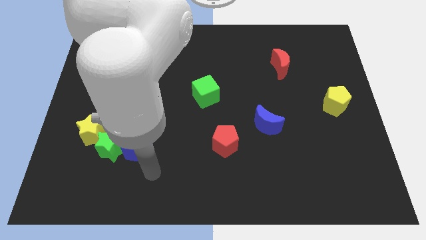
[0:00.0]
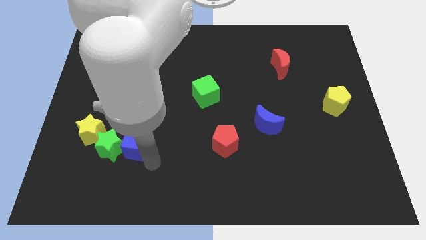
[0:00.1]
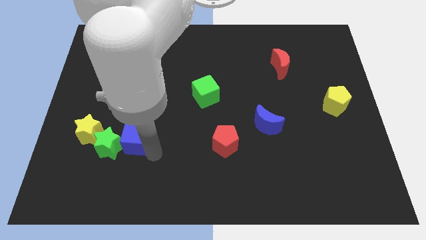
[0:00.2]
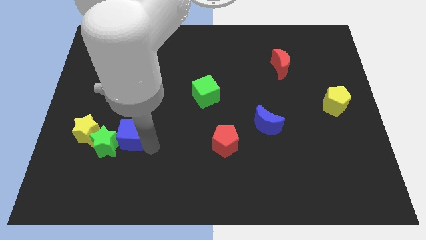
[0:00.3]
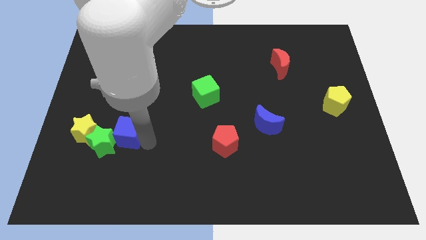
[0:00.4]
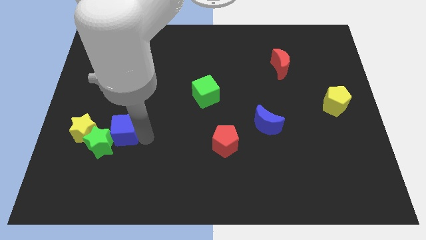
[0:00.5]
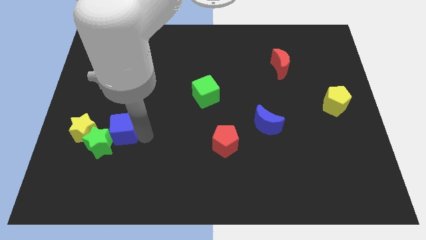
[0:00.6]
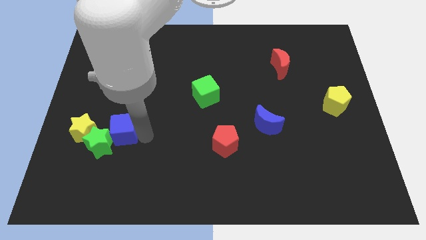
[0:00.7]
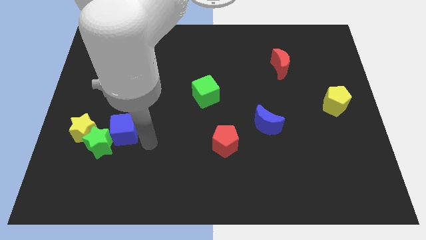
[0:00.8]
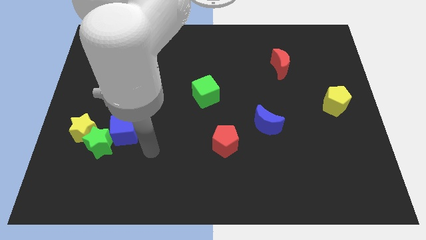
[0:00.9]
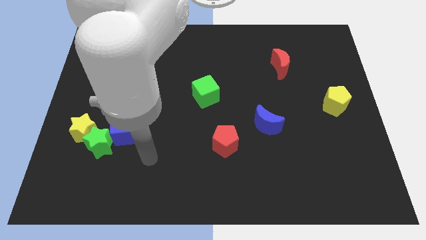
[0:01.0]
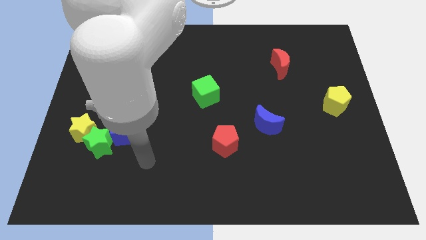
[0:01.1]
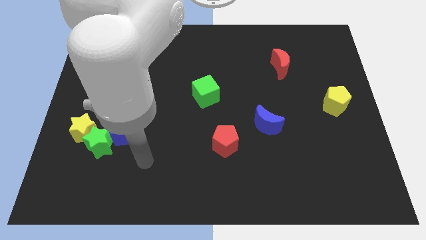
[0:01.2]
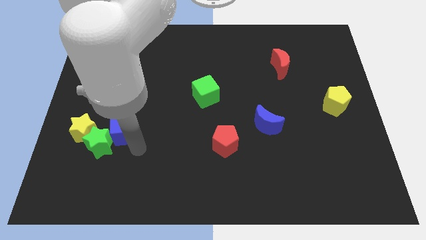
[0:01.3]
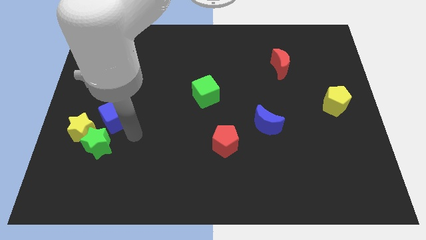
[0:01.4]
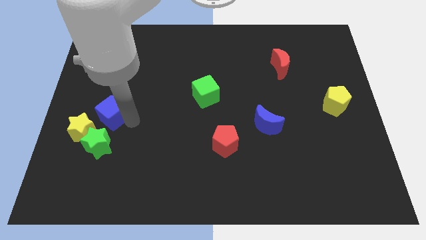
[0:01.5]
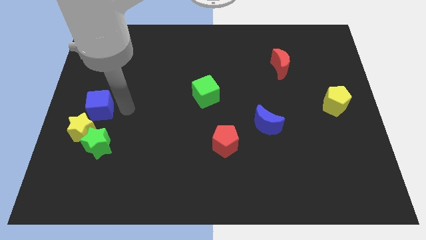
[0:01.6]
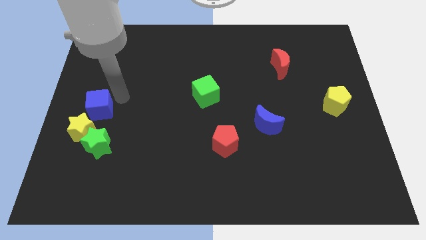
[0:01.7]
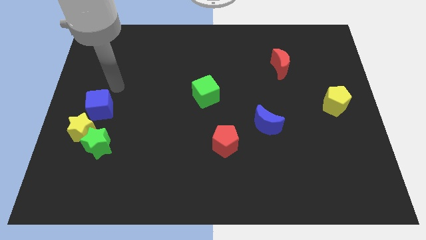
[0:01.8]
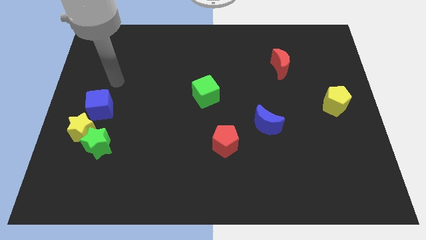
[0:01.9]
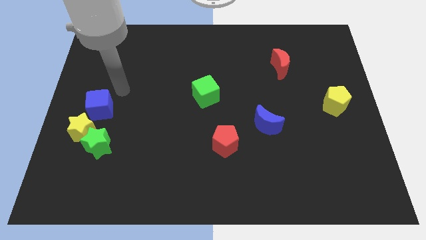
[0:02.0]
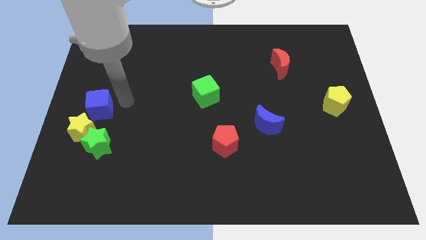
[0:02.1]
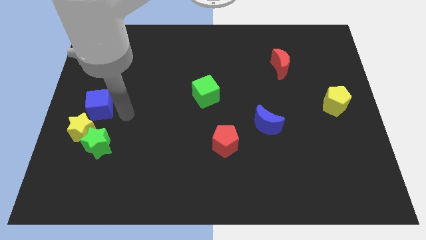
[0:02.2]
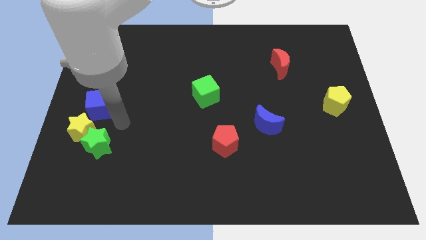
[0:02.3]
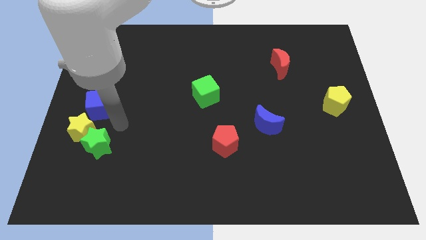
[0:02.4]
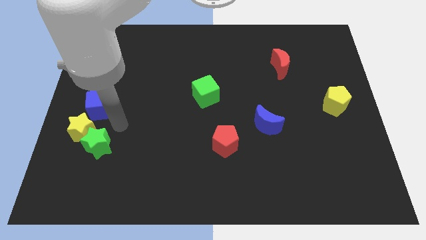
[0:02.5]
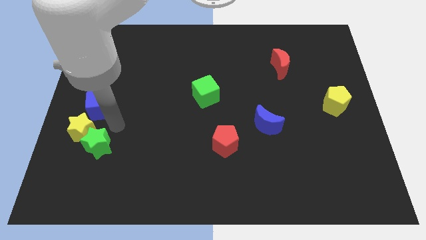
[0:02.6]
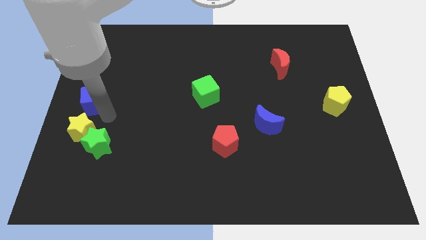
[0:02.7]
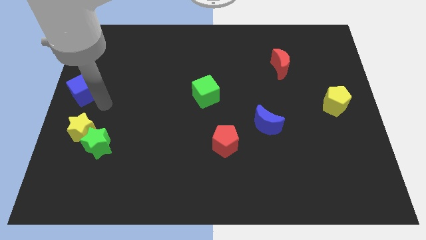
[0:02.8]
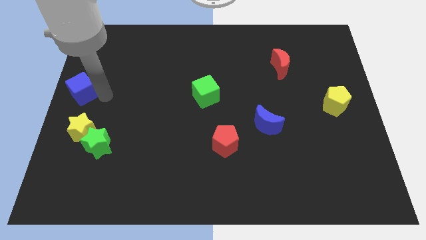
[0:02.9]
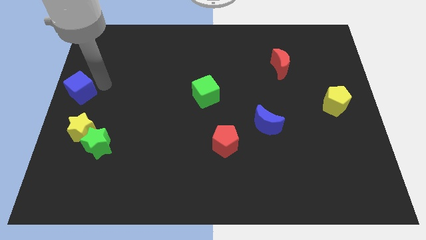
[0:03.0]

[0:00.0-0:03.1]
place the blue cube to the center left of the board

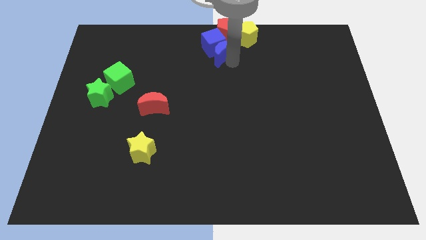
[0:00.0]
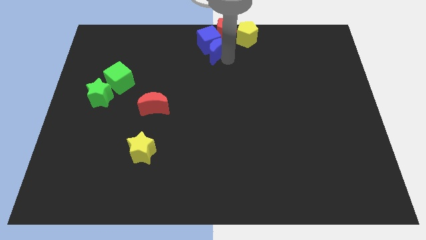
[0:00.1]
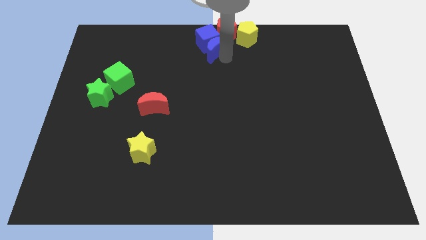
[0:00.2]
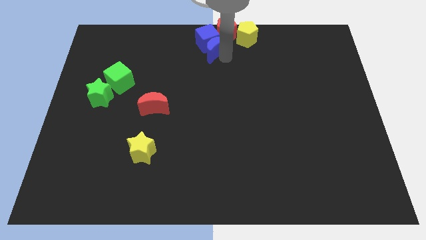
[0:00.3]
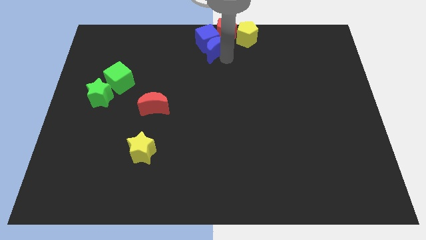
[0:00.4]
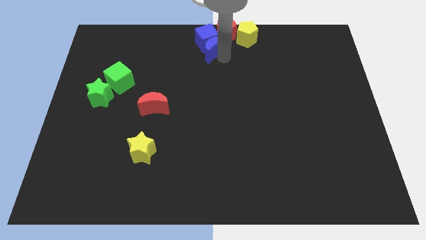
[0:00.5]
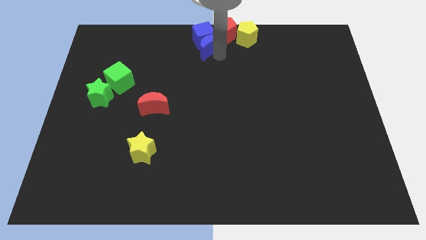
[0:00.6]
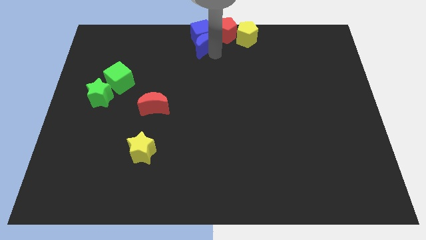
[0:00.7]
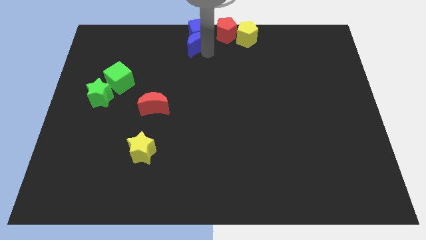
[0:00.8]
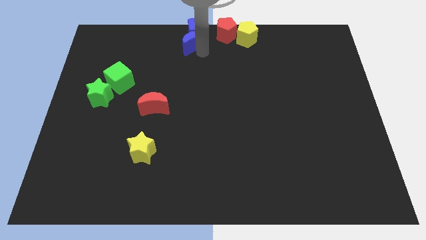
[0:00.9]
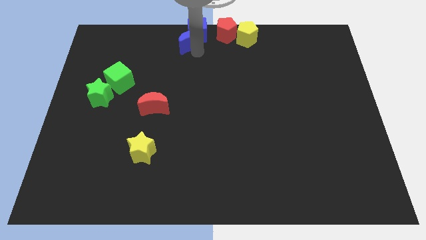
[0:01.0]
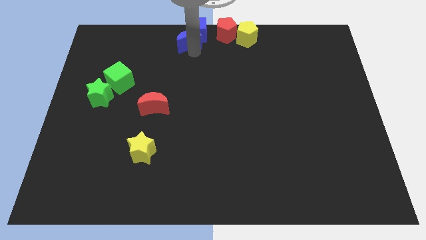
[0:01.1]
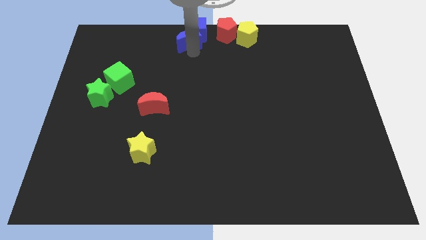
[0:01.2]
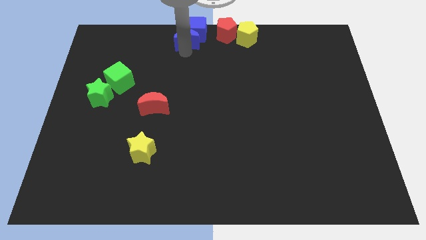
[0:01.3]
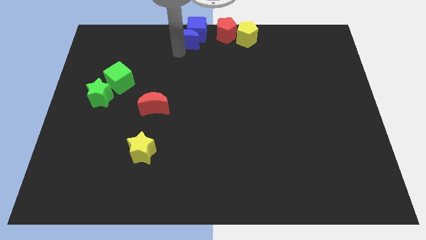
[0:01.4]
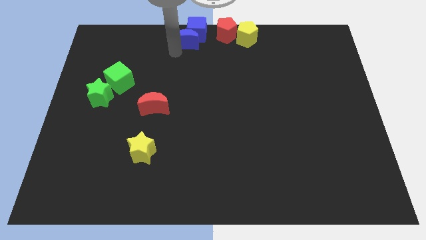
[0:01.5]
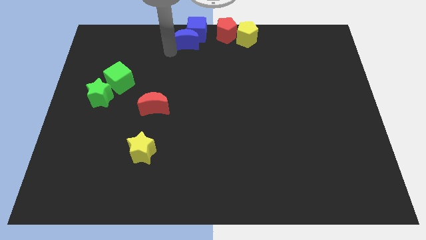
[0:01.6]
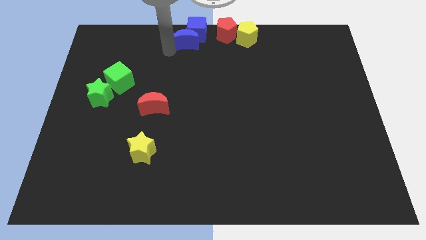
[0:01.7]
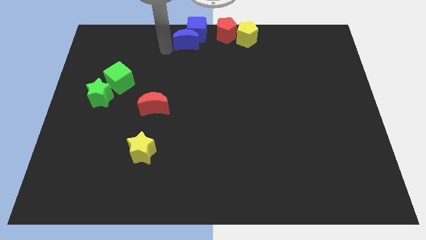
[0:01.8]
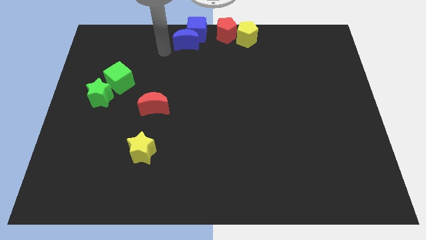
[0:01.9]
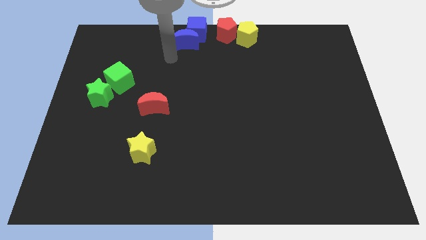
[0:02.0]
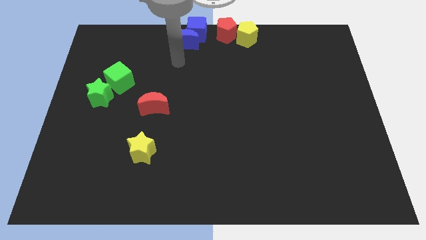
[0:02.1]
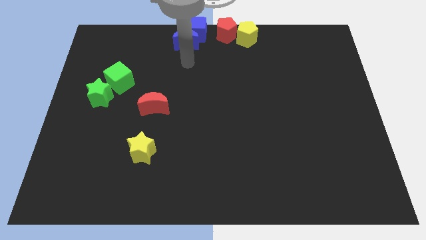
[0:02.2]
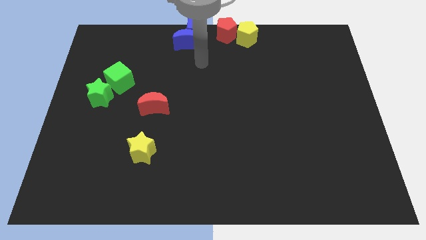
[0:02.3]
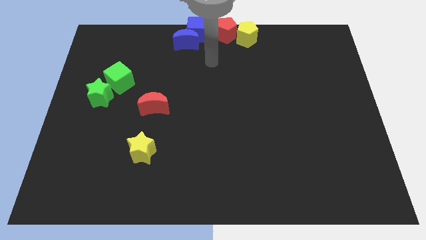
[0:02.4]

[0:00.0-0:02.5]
push the blue blocks at top side of board

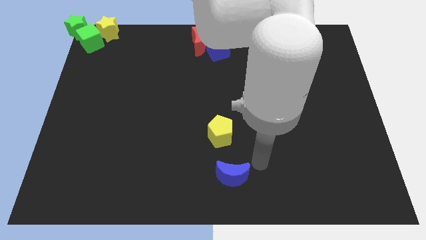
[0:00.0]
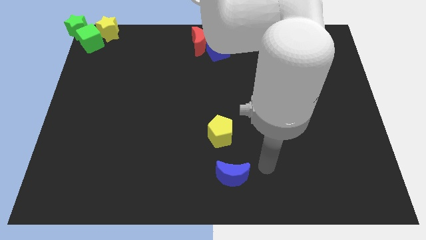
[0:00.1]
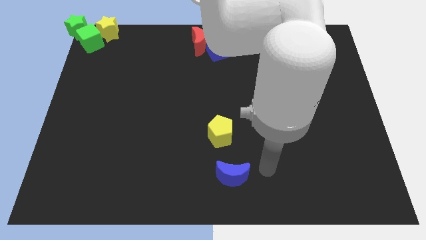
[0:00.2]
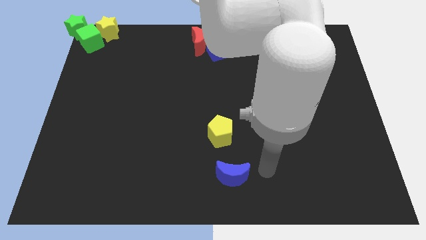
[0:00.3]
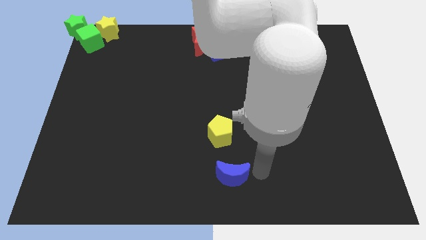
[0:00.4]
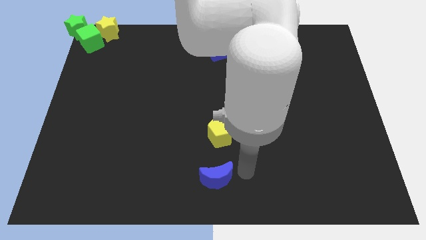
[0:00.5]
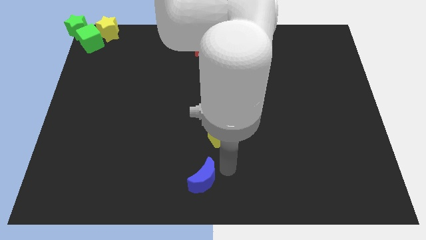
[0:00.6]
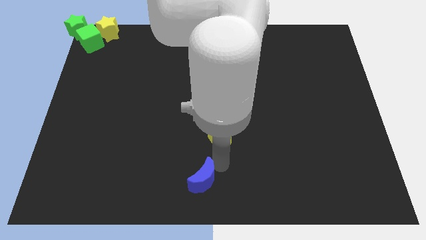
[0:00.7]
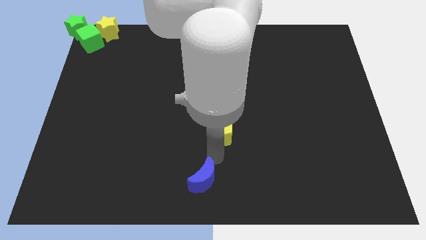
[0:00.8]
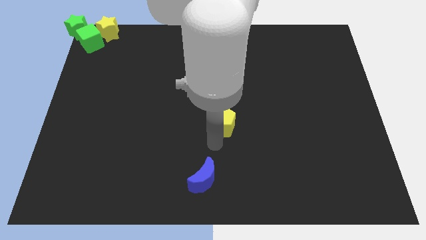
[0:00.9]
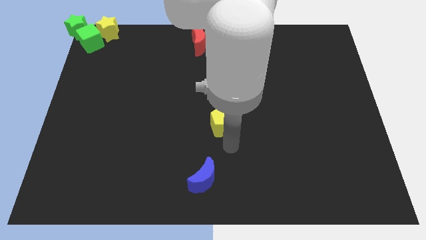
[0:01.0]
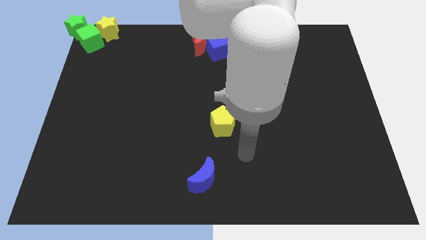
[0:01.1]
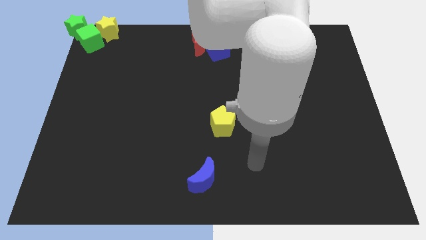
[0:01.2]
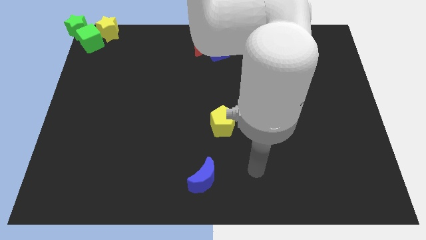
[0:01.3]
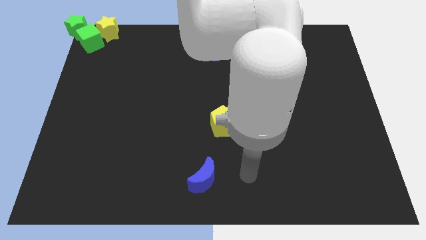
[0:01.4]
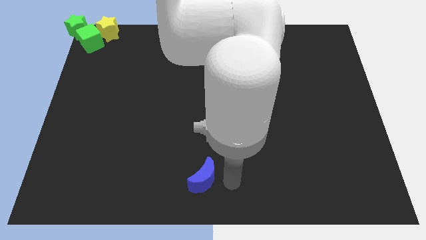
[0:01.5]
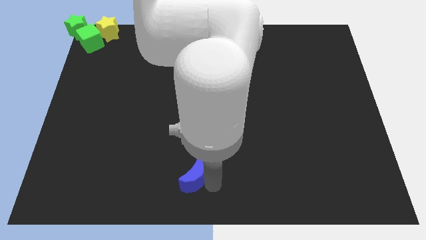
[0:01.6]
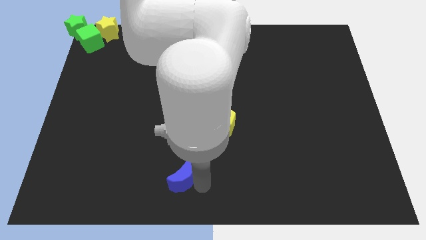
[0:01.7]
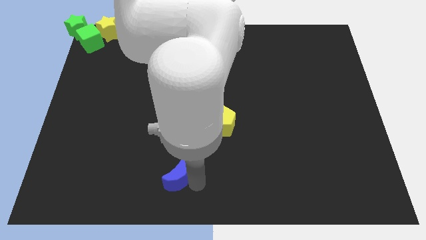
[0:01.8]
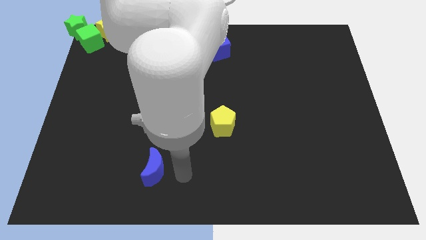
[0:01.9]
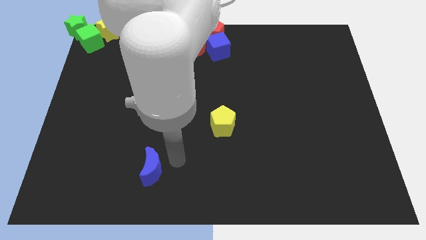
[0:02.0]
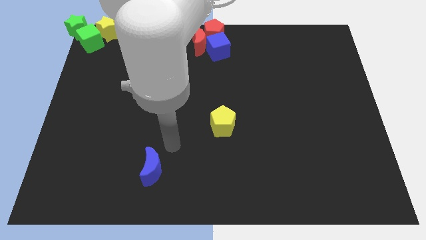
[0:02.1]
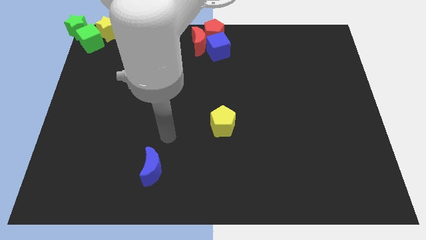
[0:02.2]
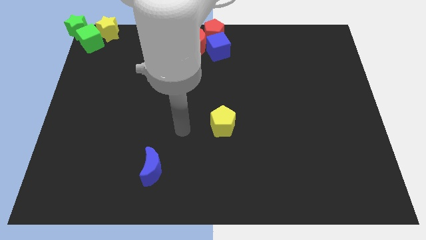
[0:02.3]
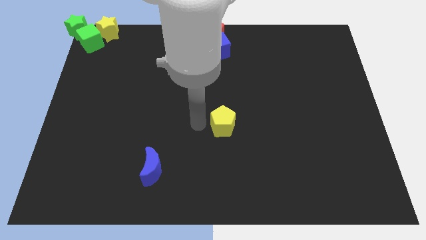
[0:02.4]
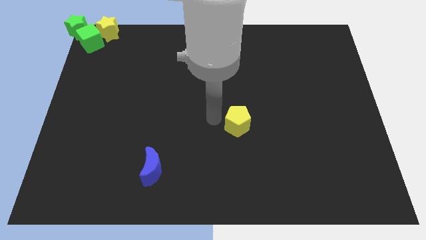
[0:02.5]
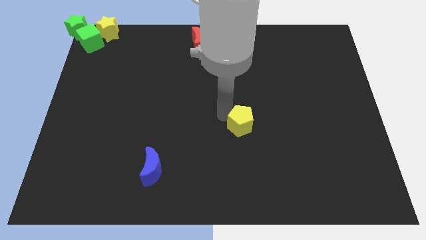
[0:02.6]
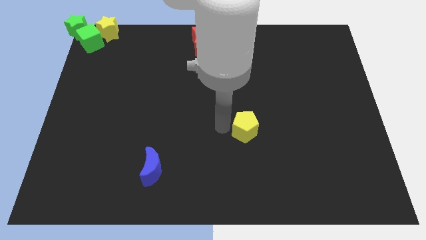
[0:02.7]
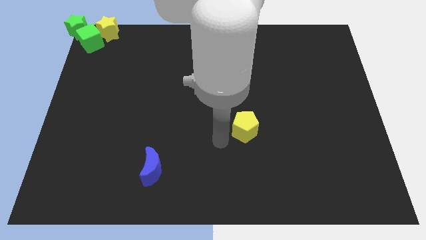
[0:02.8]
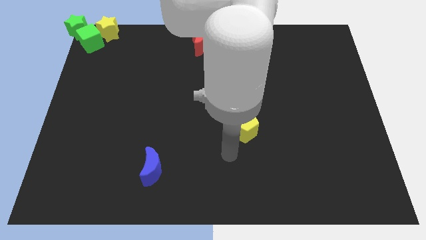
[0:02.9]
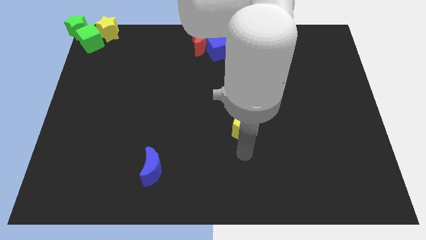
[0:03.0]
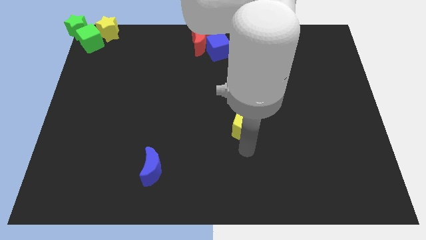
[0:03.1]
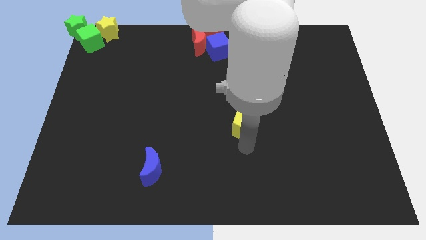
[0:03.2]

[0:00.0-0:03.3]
push the blue crescent to the left
